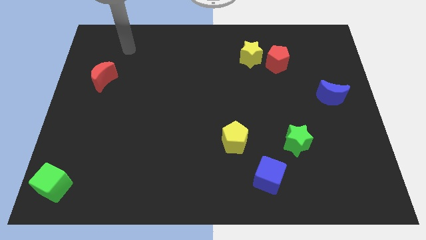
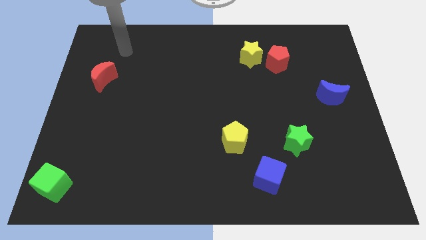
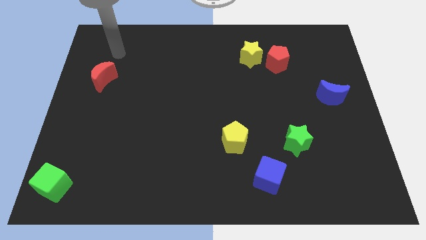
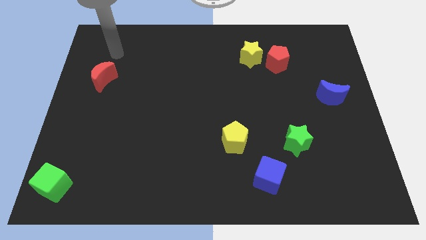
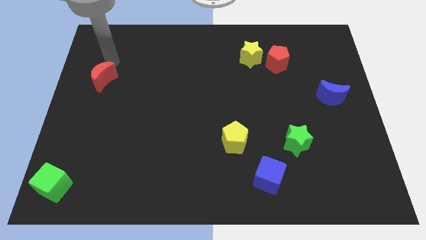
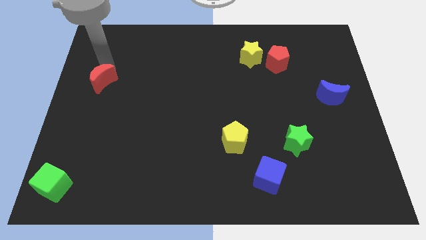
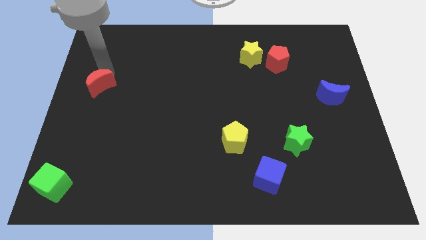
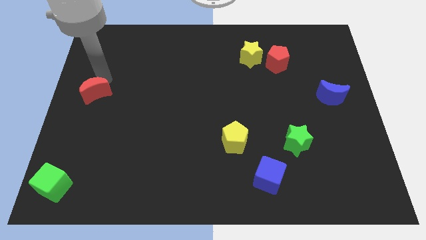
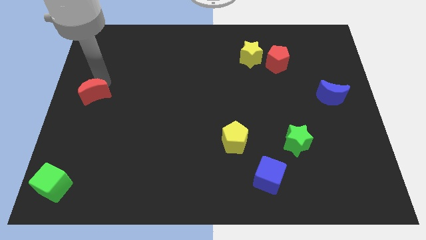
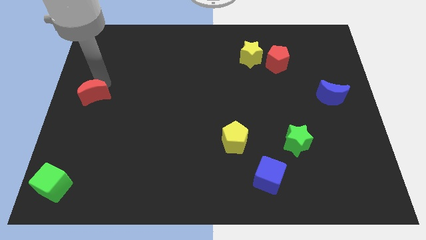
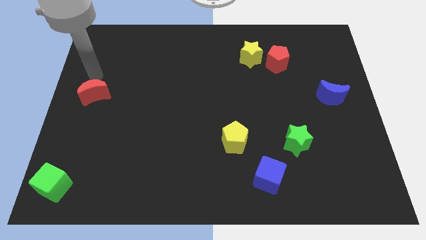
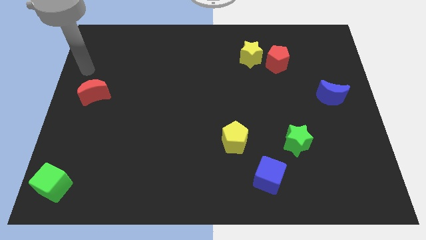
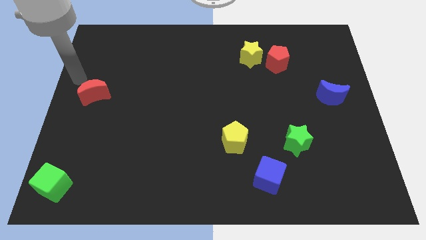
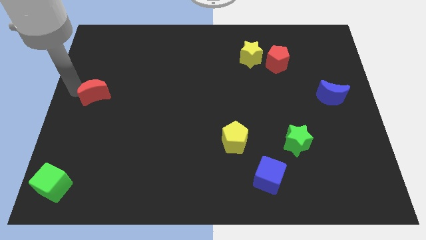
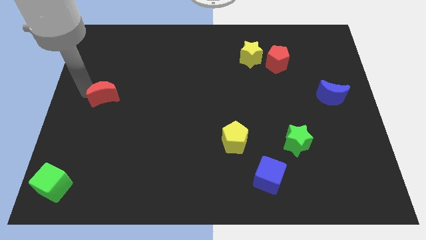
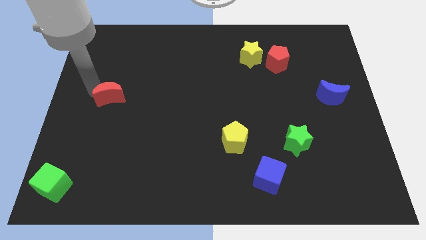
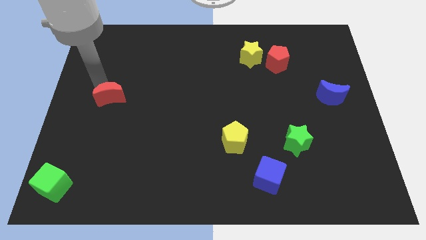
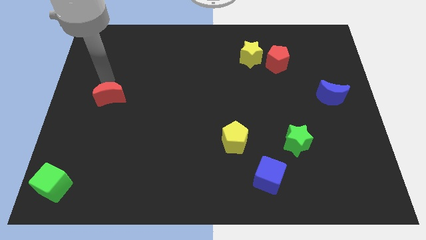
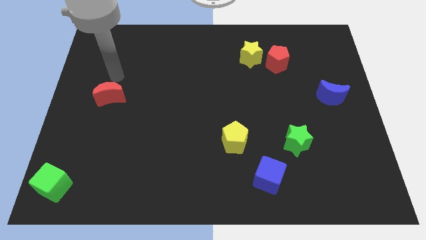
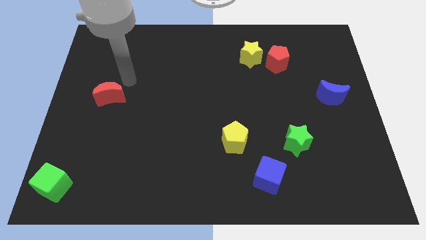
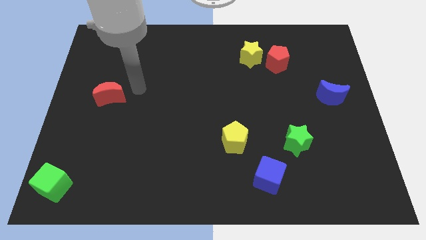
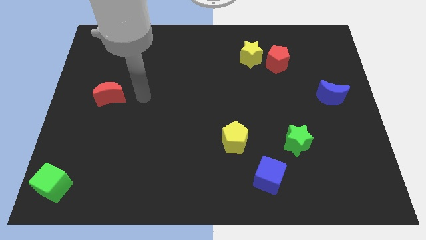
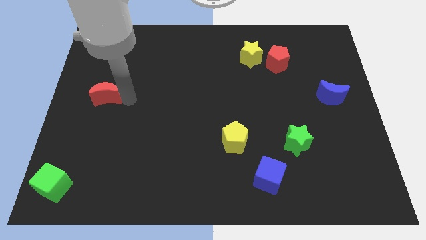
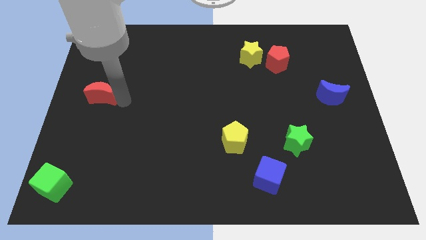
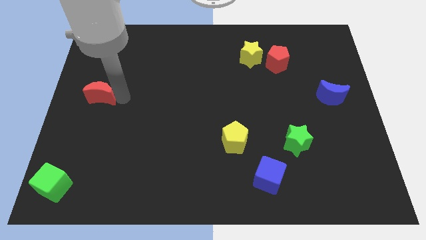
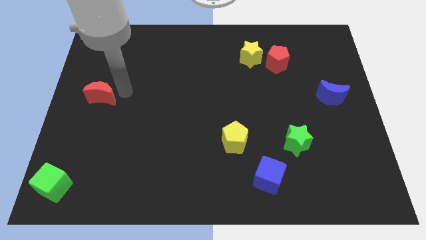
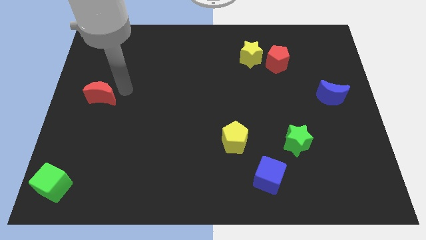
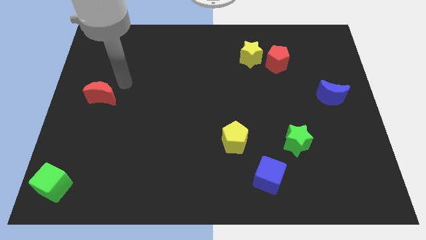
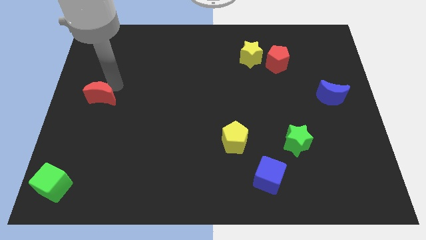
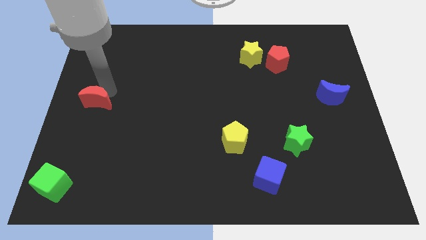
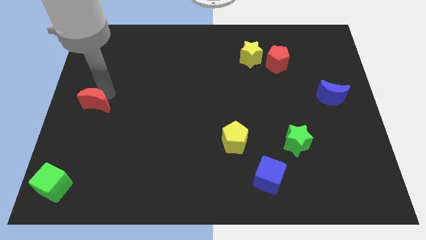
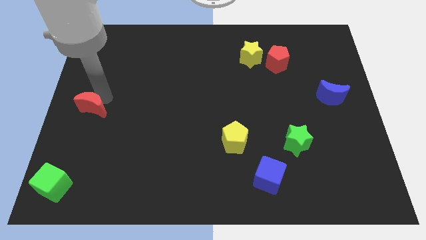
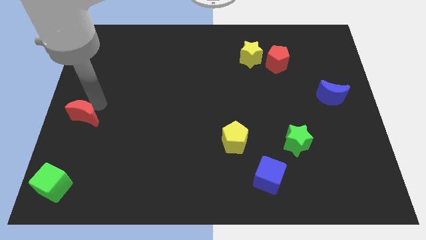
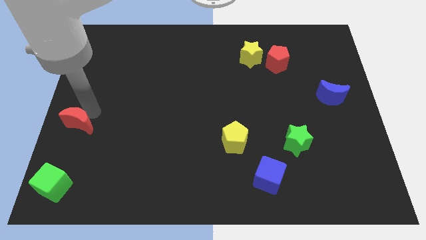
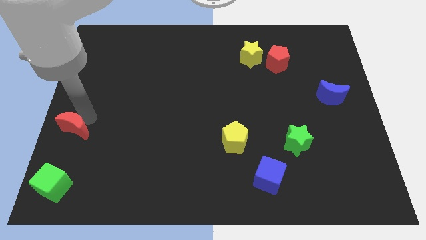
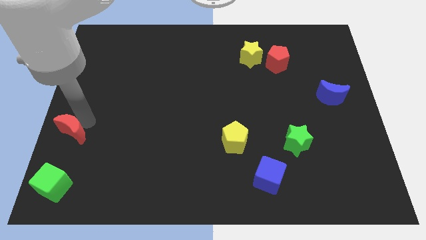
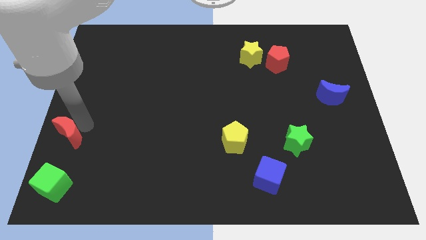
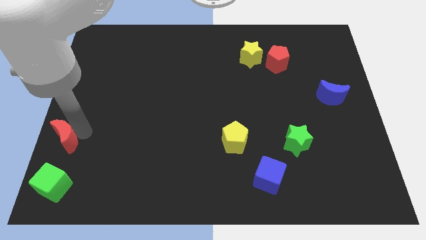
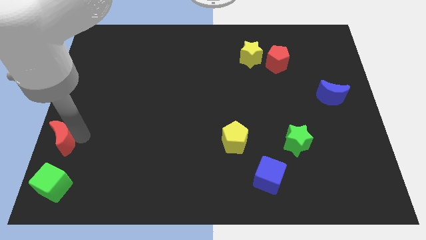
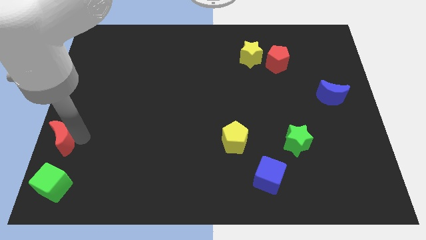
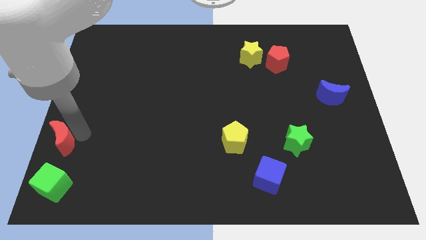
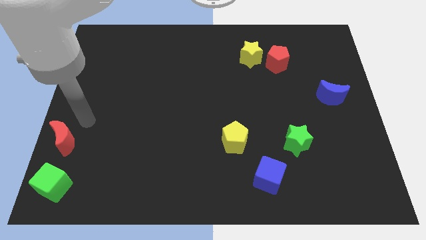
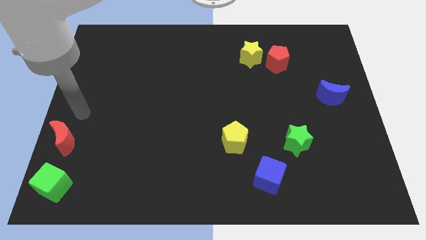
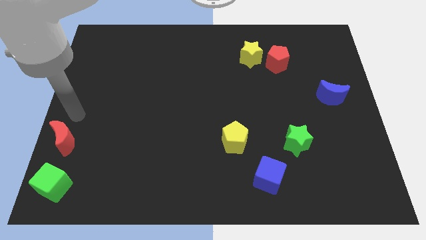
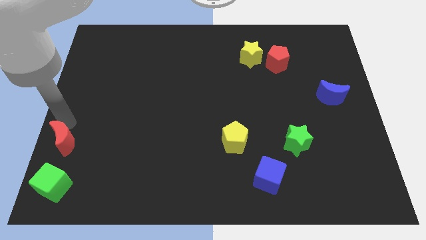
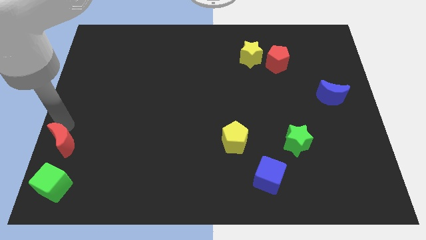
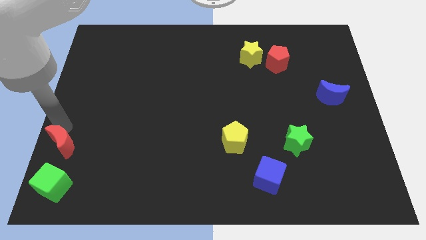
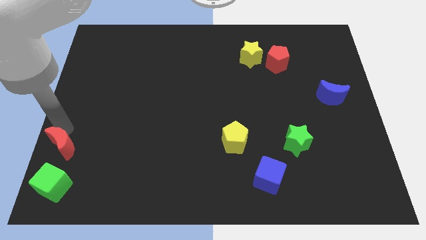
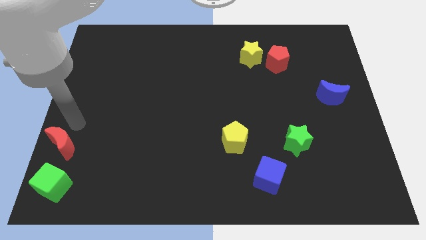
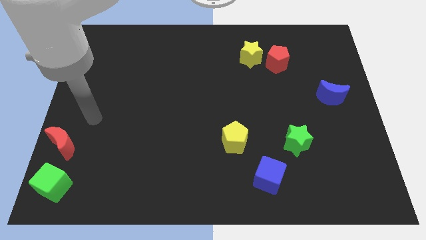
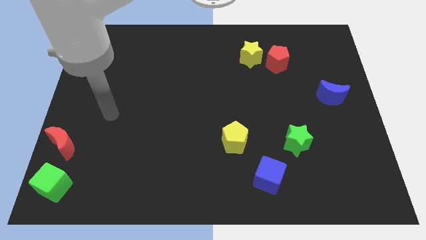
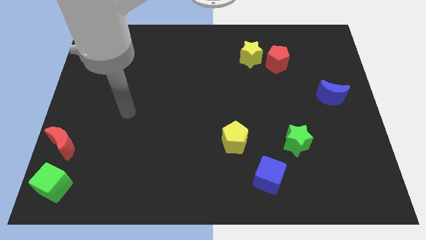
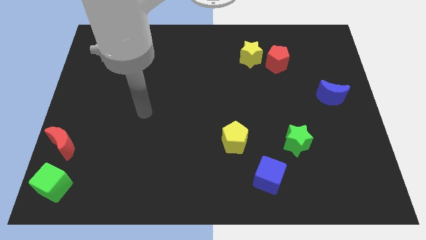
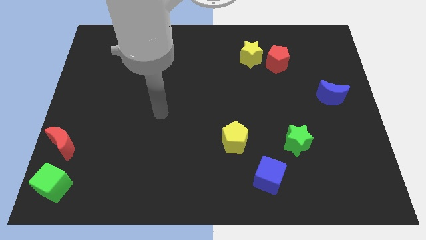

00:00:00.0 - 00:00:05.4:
push the red crescent towards the green cube

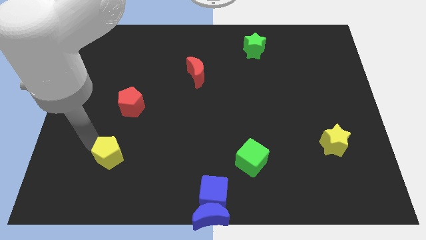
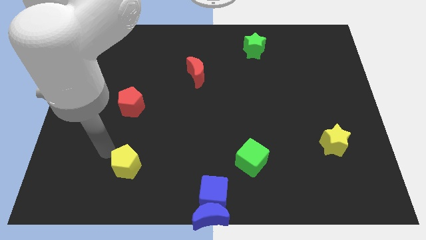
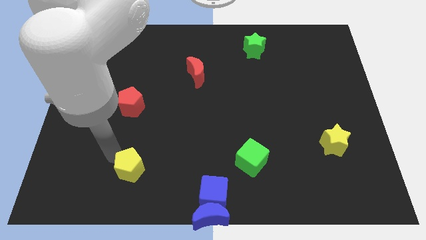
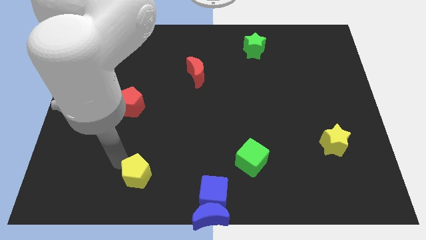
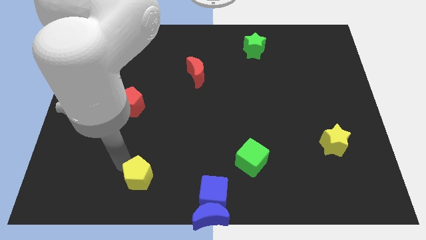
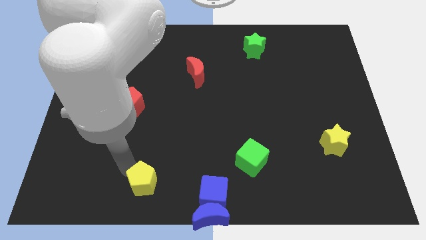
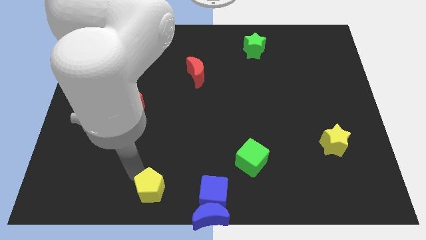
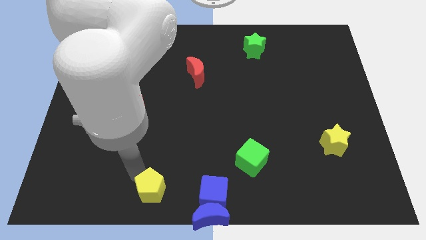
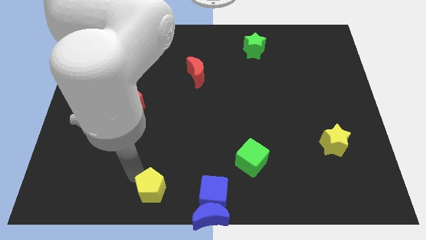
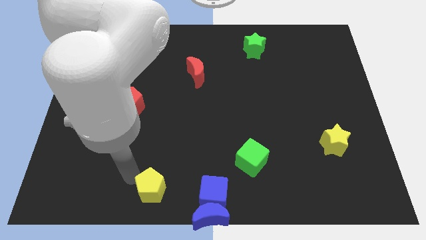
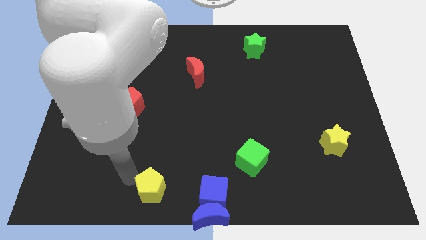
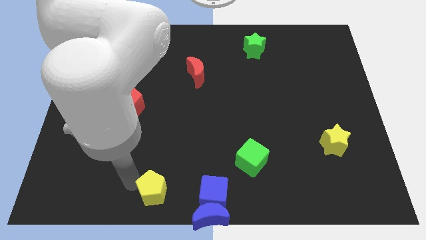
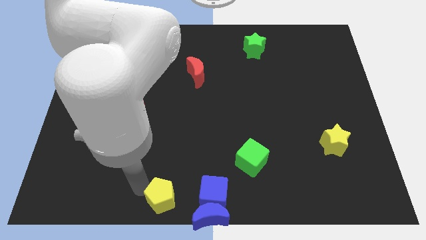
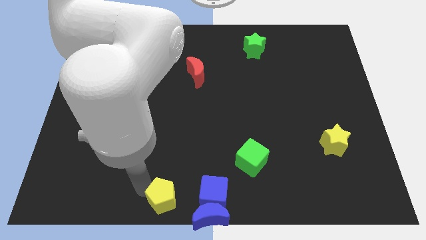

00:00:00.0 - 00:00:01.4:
push the yellow pentagon towards the left side of the blue cube

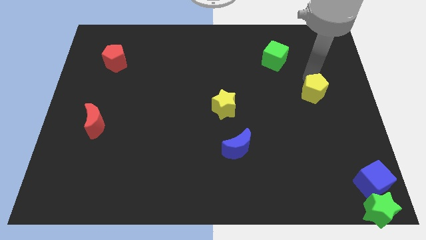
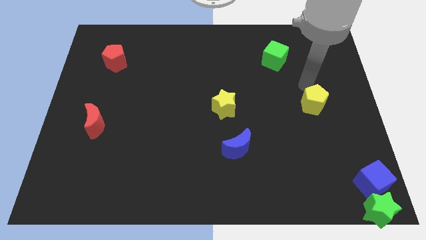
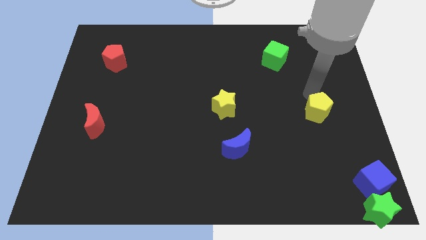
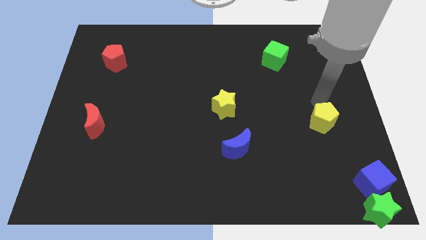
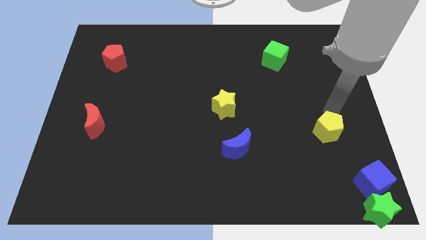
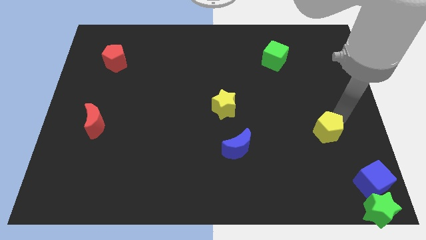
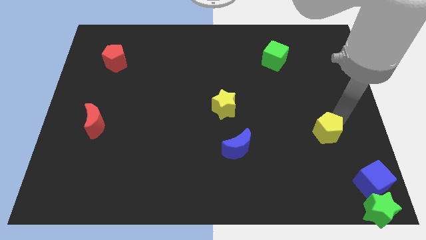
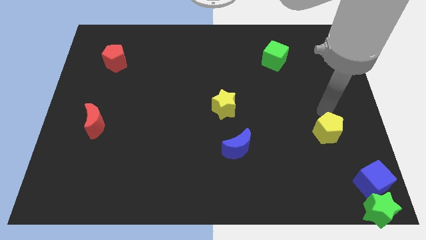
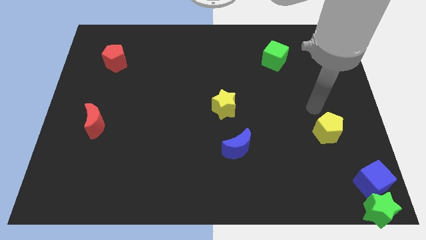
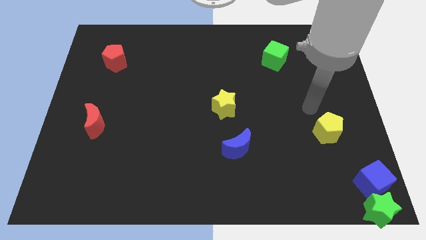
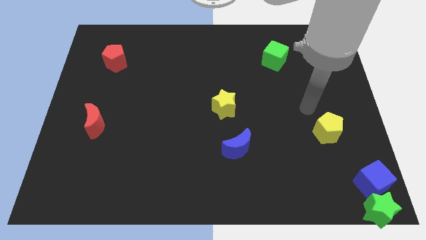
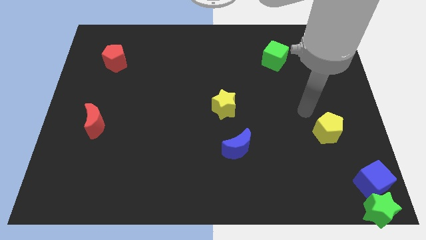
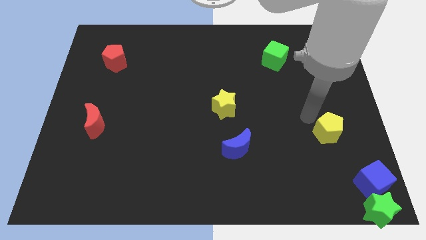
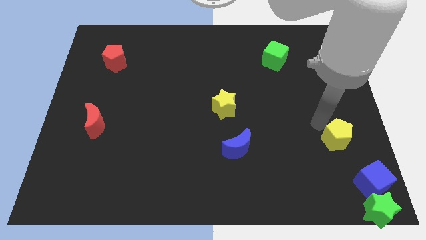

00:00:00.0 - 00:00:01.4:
push the yellow pentagon slightly to the bottom

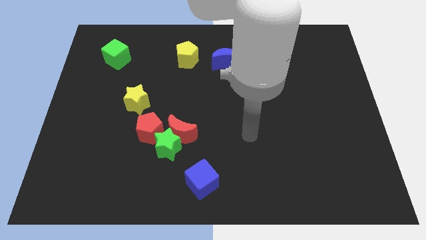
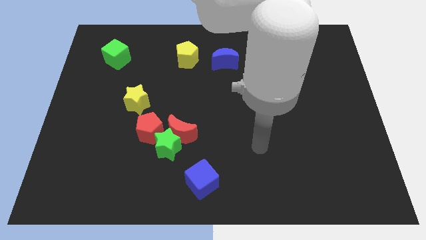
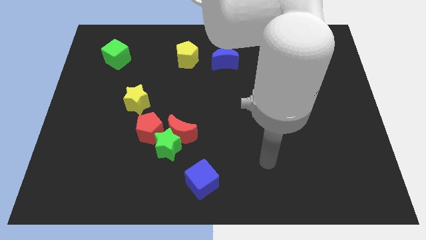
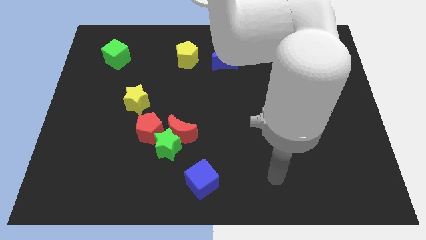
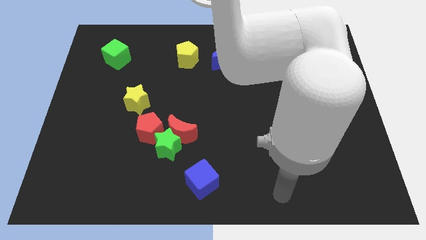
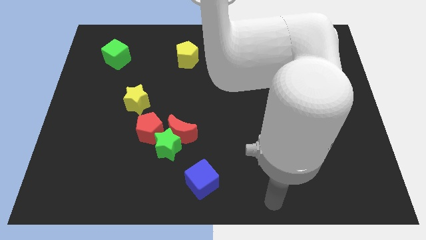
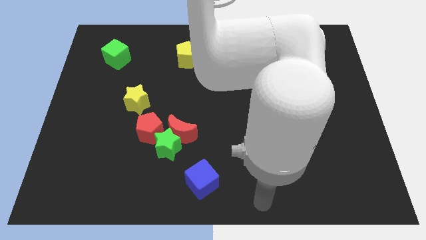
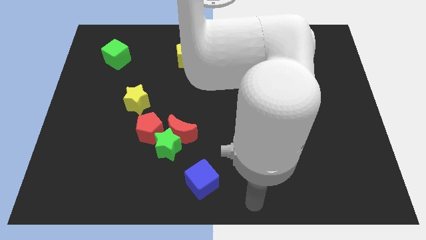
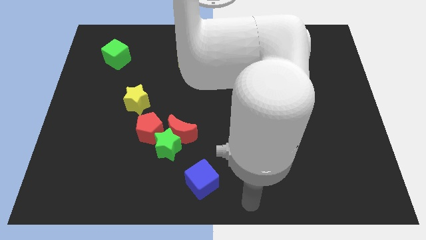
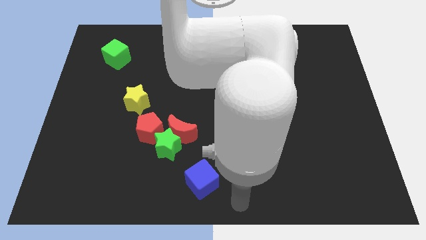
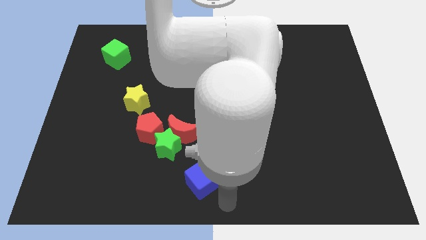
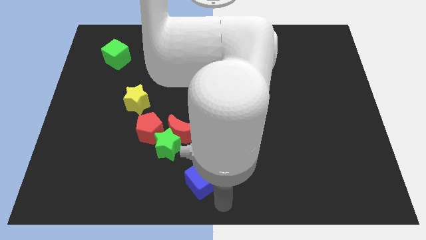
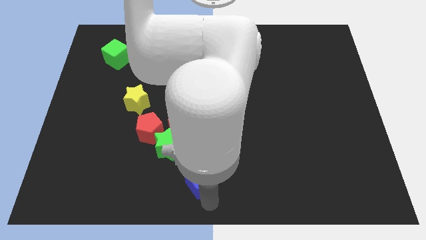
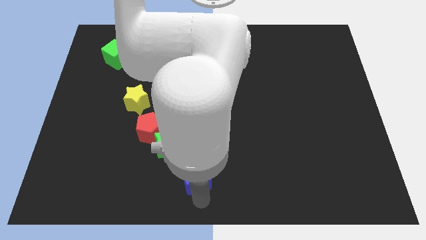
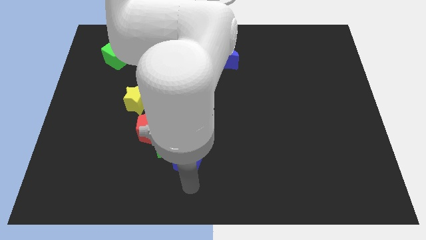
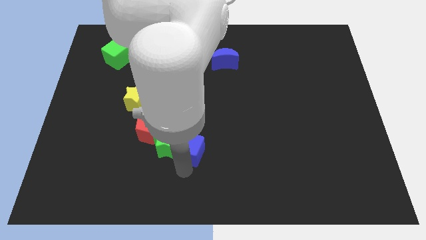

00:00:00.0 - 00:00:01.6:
push the blue cube to the bottom of the red crescent on the board
